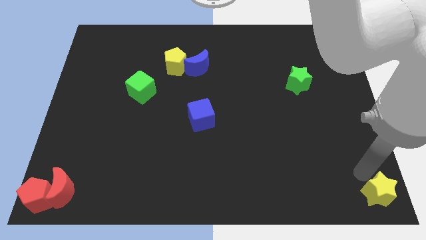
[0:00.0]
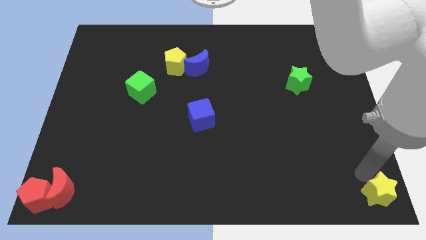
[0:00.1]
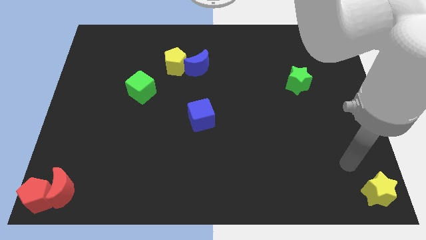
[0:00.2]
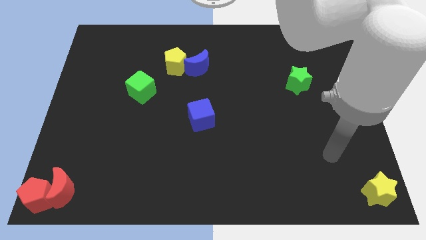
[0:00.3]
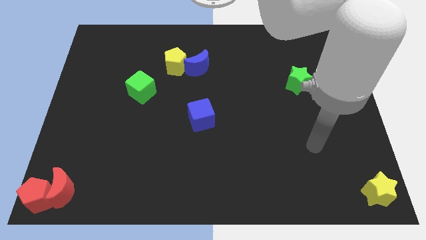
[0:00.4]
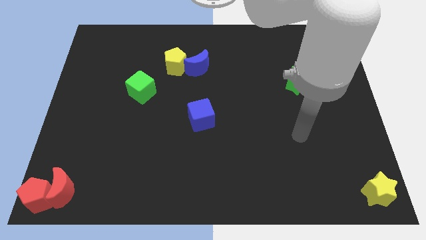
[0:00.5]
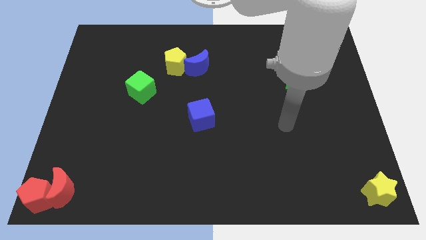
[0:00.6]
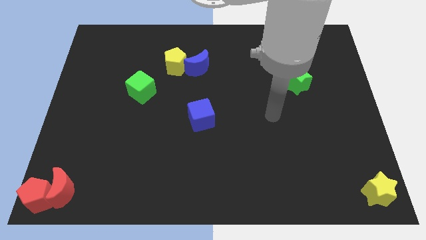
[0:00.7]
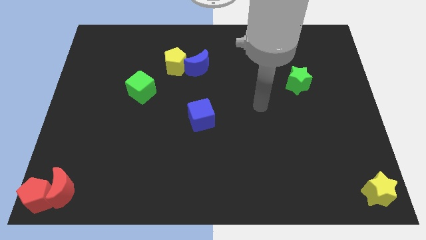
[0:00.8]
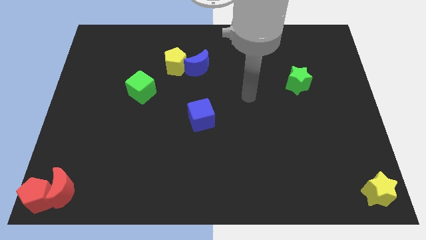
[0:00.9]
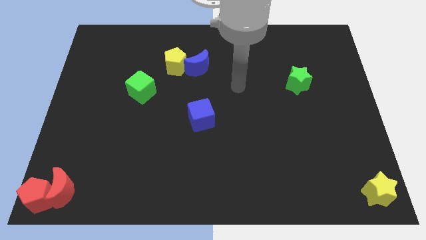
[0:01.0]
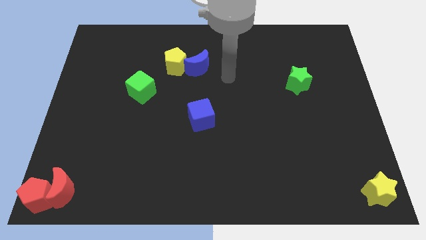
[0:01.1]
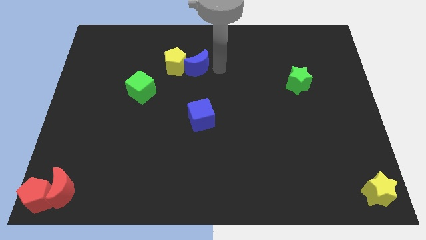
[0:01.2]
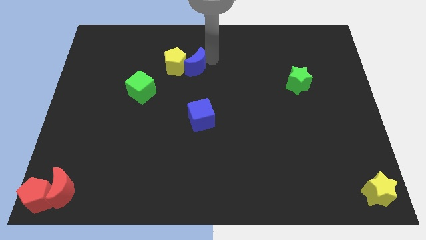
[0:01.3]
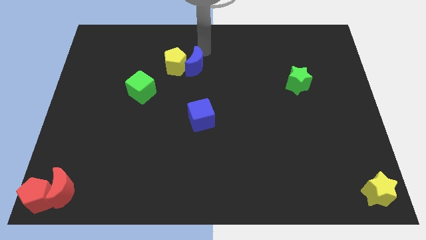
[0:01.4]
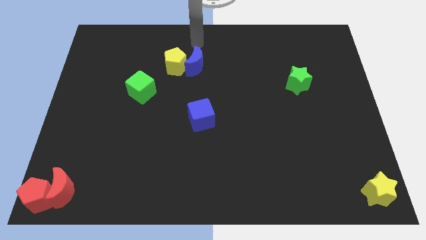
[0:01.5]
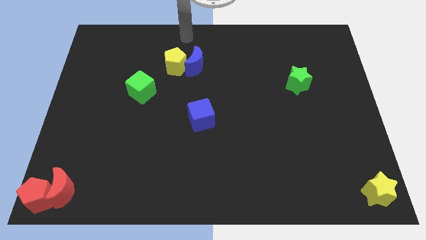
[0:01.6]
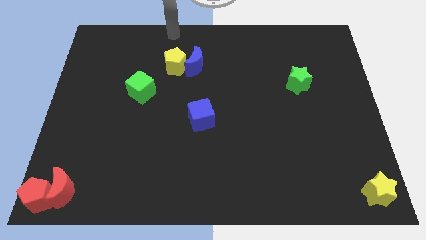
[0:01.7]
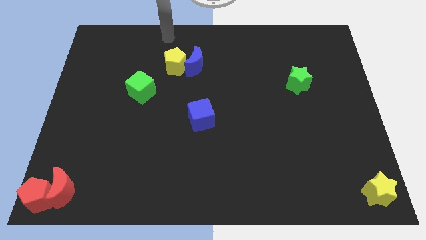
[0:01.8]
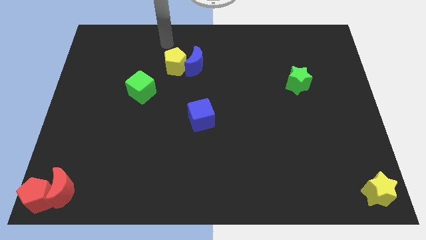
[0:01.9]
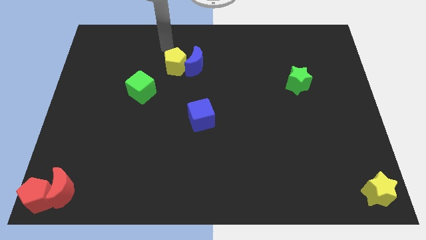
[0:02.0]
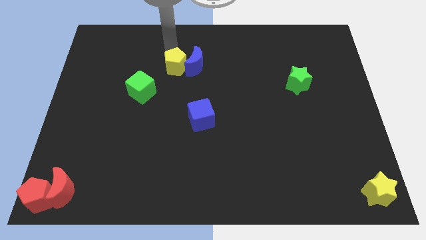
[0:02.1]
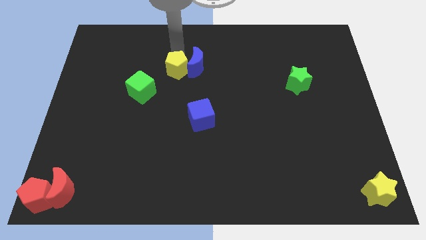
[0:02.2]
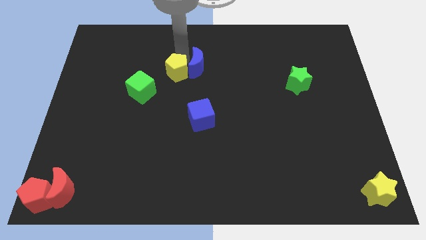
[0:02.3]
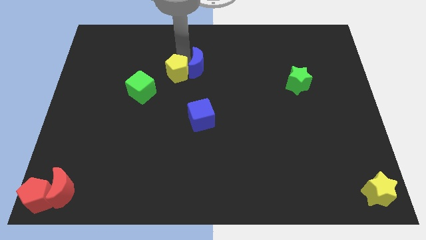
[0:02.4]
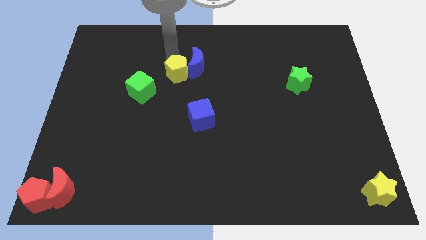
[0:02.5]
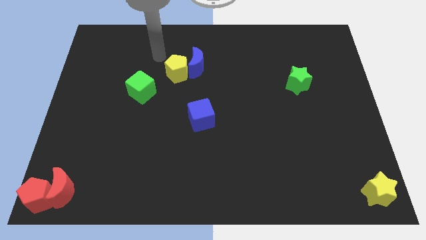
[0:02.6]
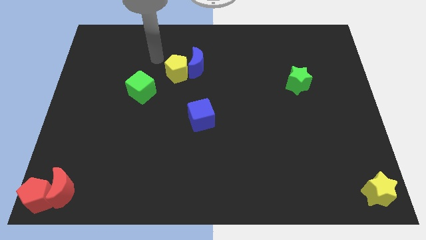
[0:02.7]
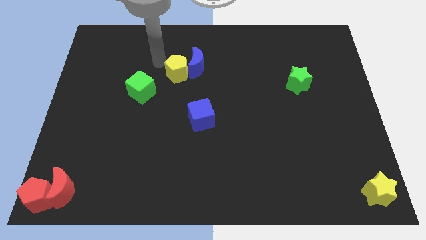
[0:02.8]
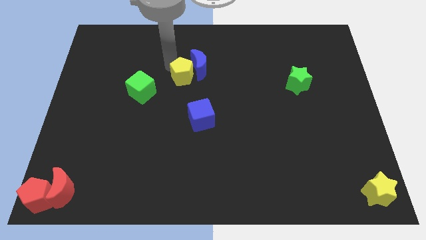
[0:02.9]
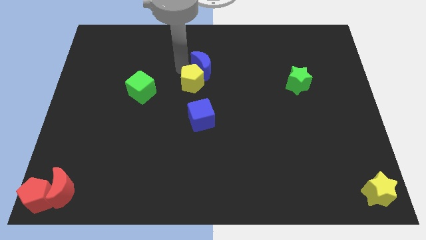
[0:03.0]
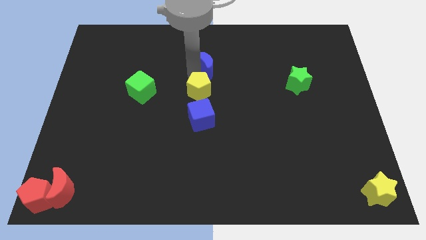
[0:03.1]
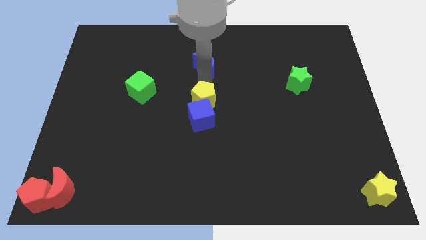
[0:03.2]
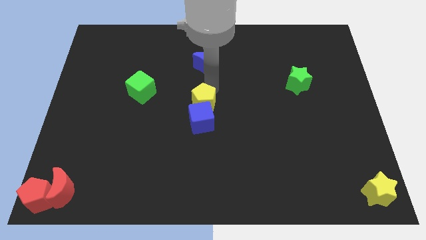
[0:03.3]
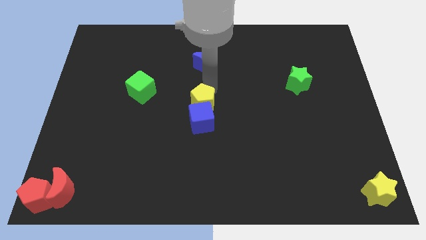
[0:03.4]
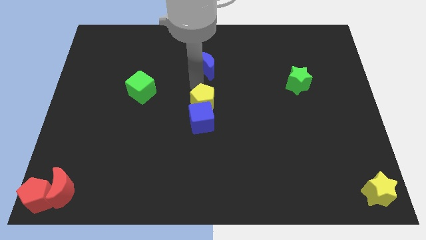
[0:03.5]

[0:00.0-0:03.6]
slide the yellow pentagon into the top side of the blue cube

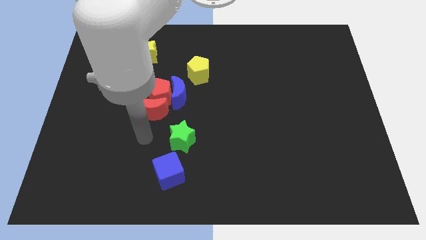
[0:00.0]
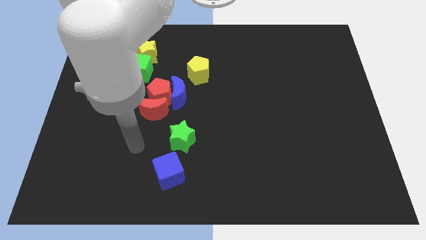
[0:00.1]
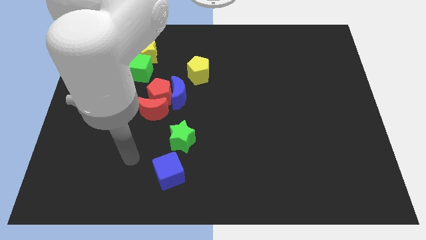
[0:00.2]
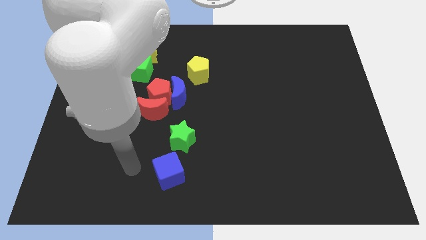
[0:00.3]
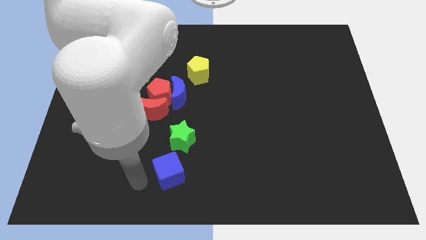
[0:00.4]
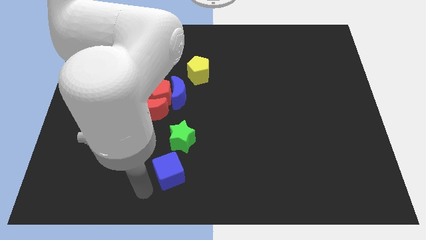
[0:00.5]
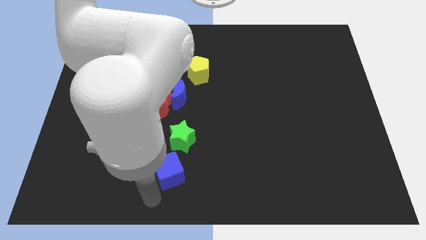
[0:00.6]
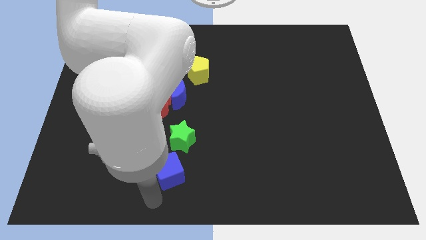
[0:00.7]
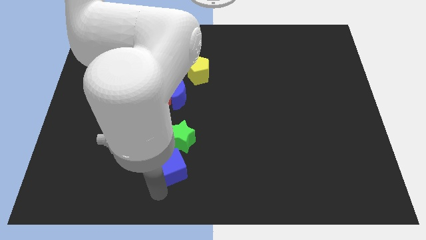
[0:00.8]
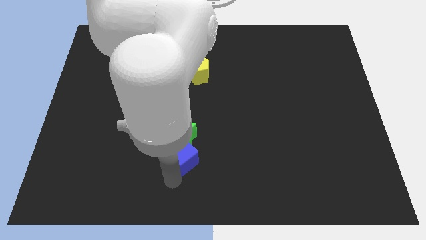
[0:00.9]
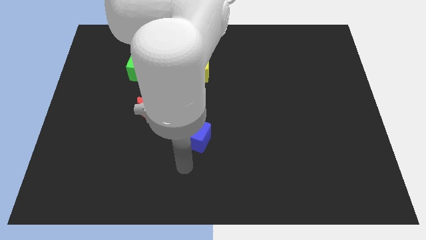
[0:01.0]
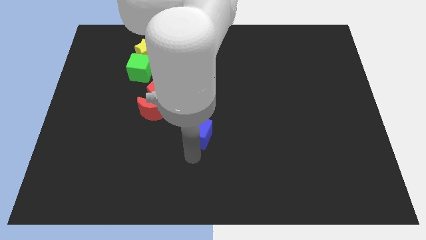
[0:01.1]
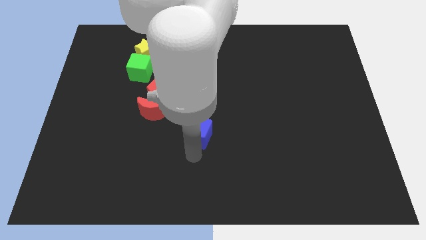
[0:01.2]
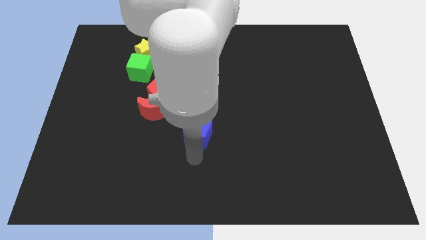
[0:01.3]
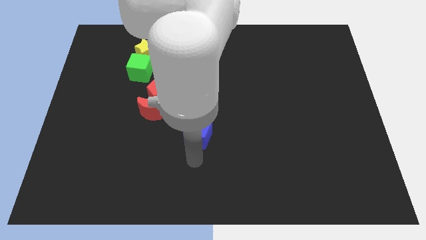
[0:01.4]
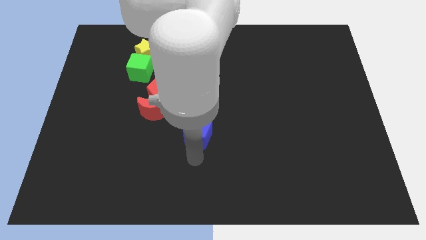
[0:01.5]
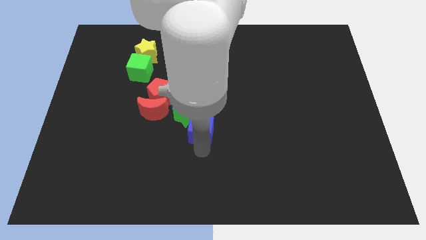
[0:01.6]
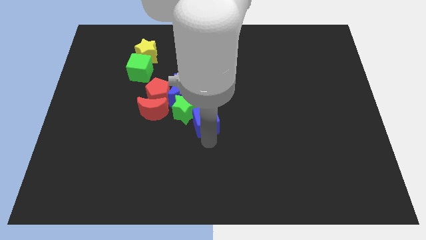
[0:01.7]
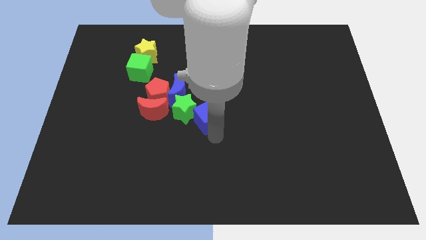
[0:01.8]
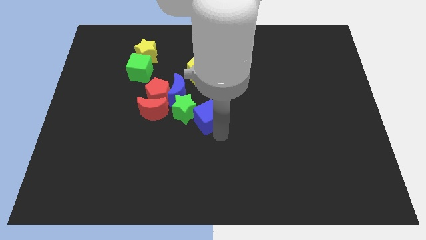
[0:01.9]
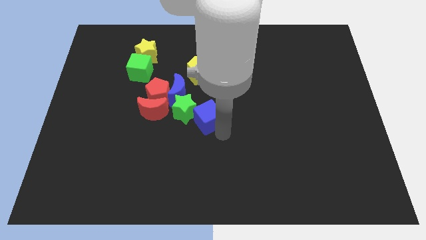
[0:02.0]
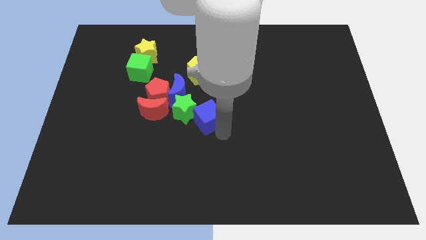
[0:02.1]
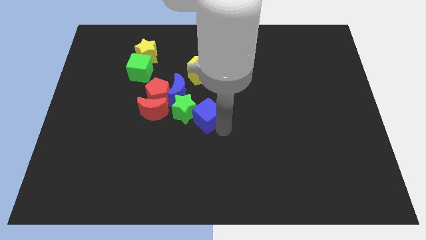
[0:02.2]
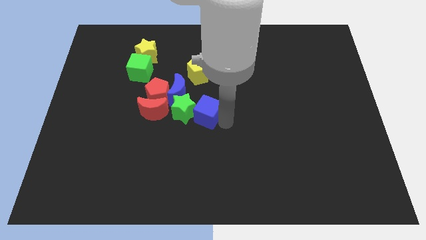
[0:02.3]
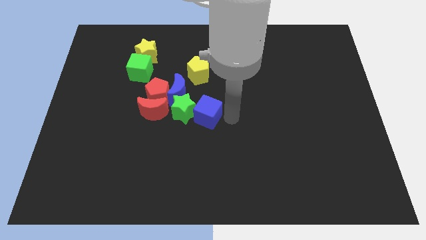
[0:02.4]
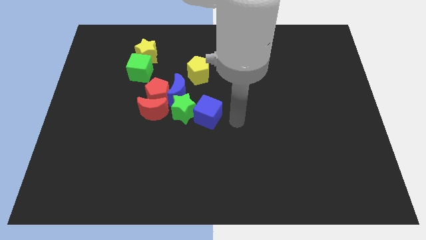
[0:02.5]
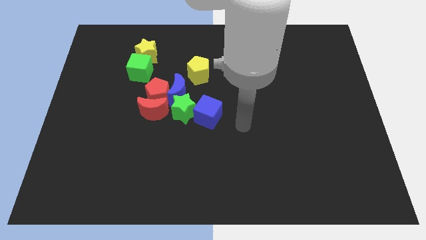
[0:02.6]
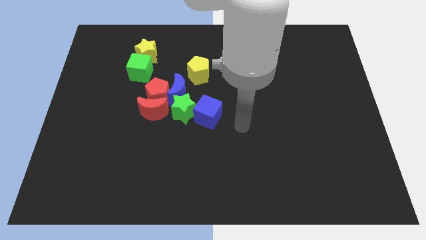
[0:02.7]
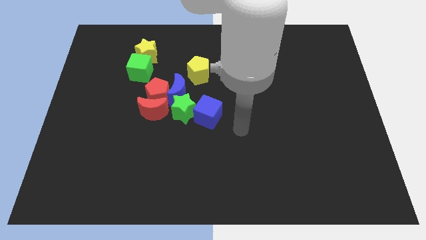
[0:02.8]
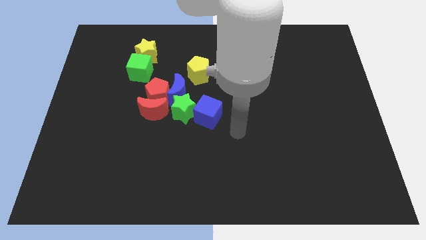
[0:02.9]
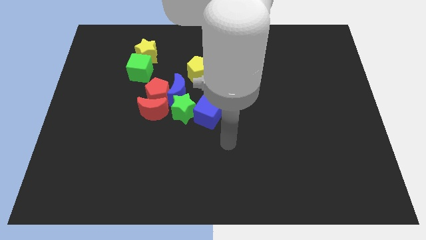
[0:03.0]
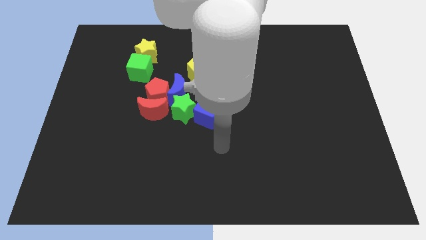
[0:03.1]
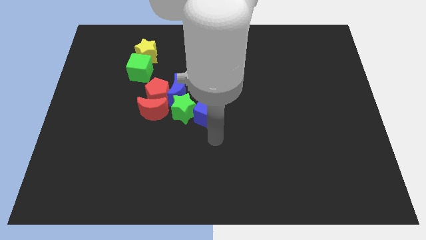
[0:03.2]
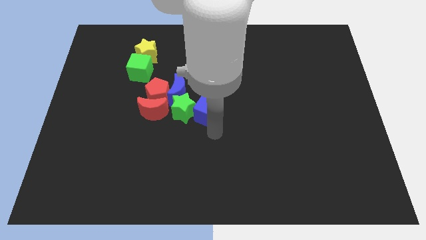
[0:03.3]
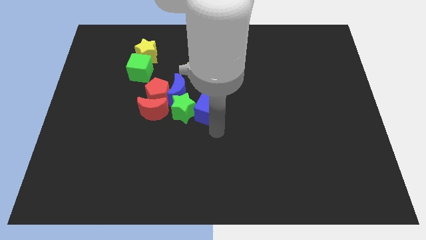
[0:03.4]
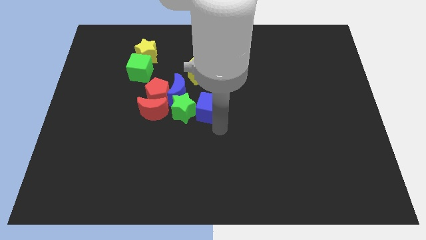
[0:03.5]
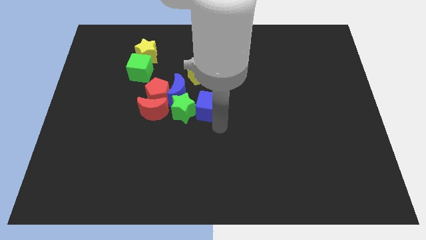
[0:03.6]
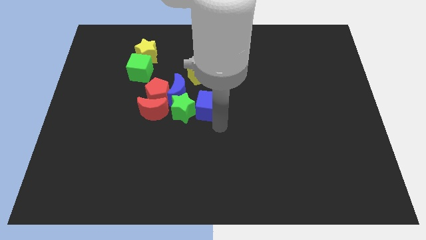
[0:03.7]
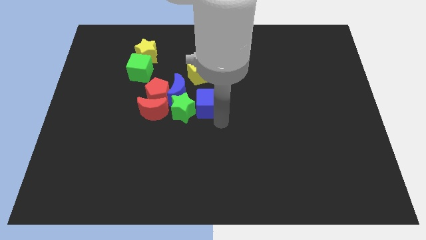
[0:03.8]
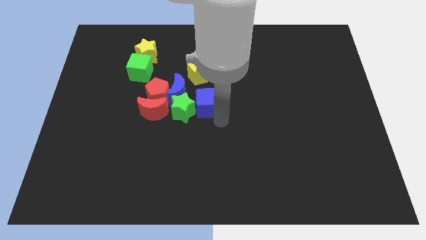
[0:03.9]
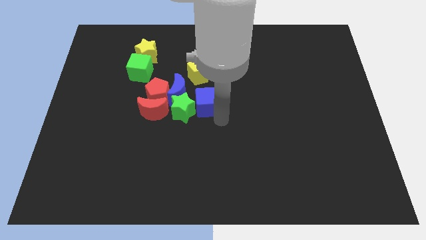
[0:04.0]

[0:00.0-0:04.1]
move the blue cube to the right side of the green star

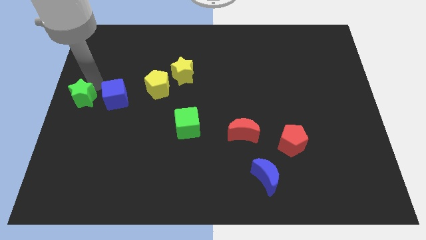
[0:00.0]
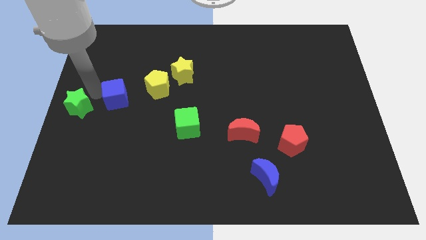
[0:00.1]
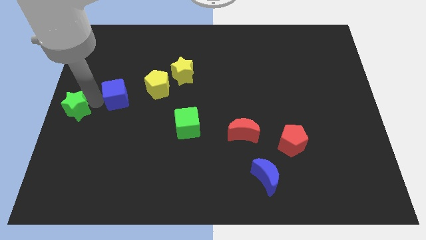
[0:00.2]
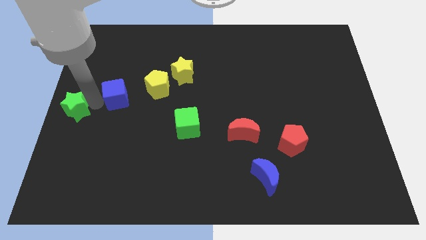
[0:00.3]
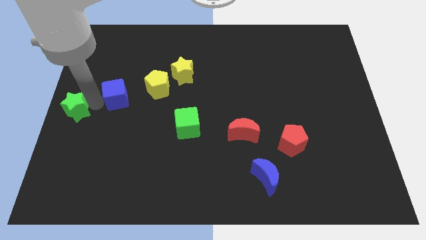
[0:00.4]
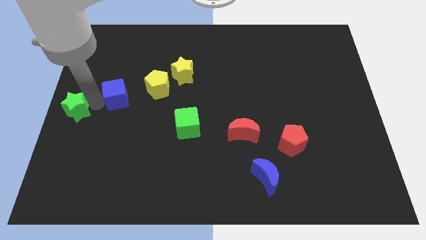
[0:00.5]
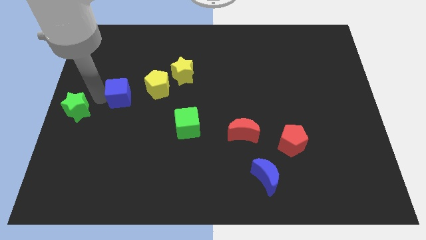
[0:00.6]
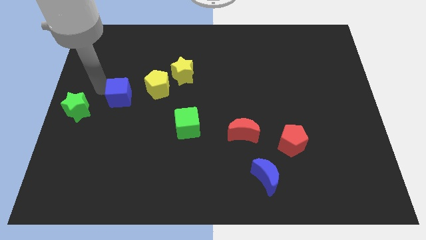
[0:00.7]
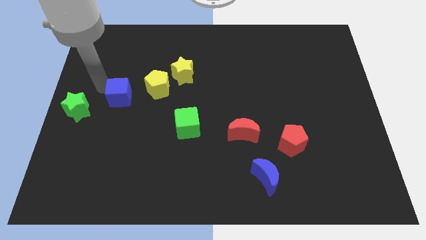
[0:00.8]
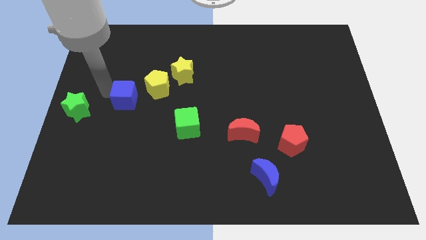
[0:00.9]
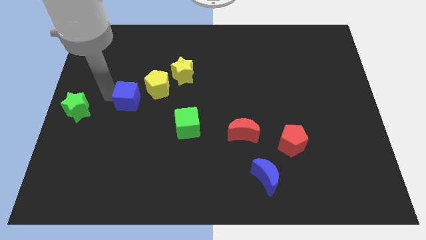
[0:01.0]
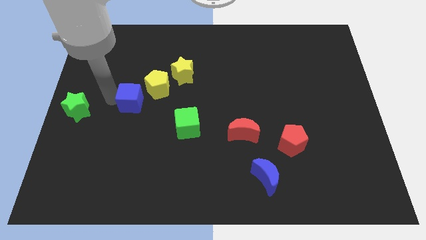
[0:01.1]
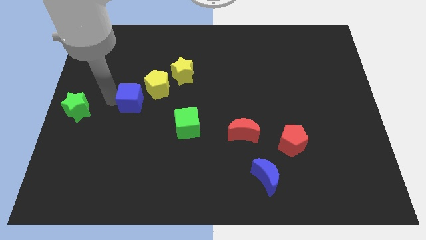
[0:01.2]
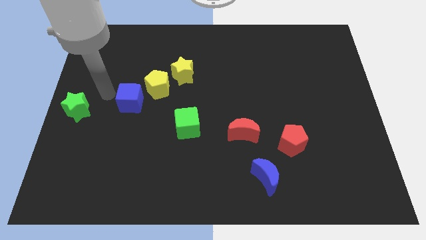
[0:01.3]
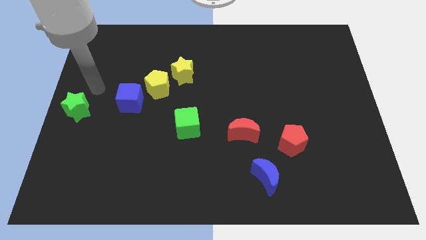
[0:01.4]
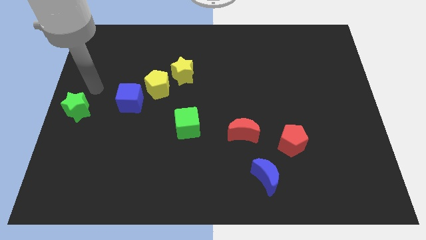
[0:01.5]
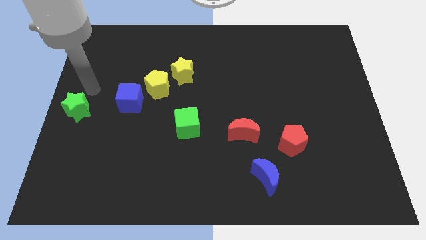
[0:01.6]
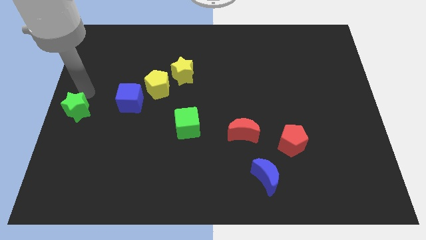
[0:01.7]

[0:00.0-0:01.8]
adjust the blue cube close to the yellow pentagon
